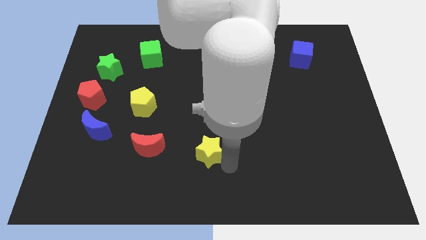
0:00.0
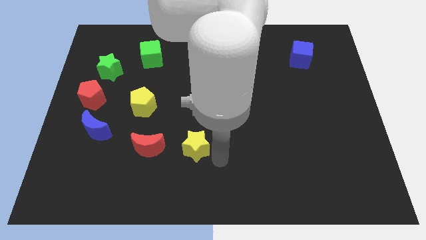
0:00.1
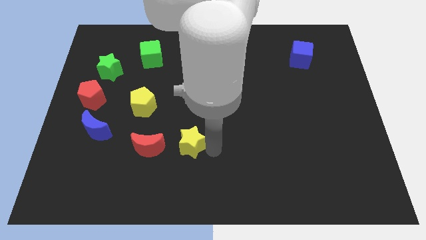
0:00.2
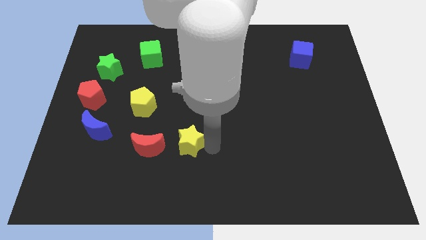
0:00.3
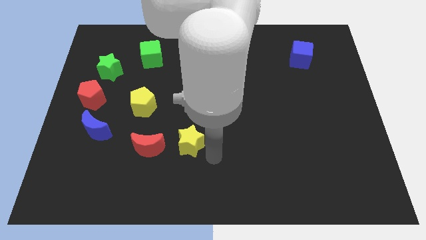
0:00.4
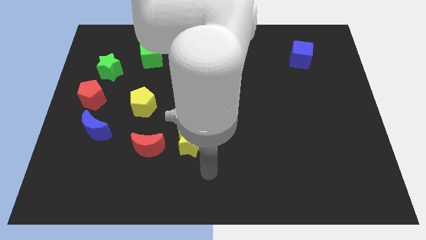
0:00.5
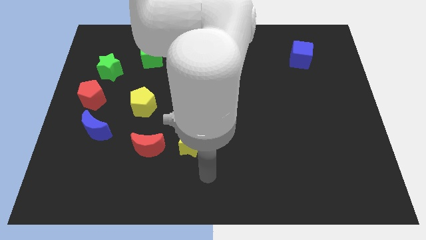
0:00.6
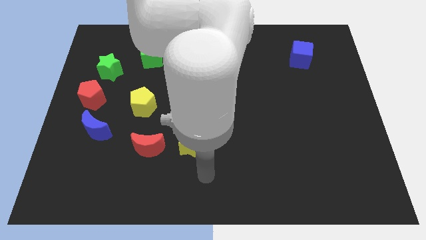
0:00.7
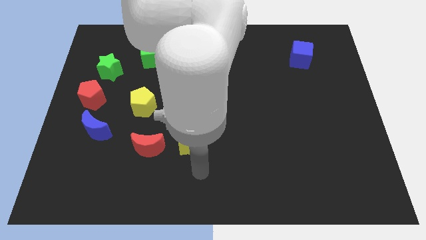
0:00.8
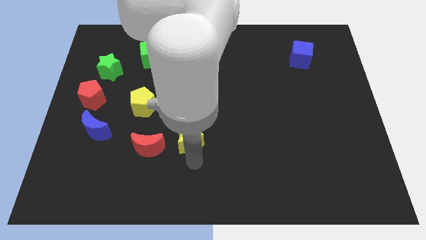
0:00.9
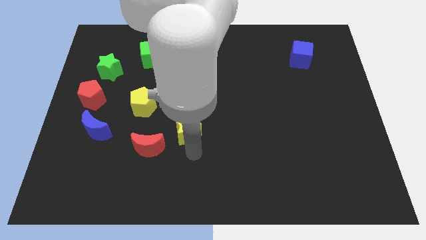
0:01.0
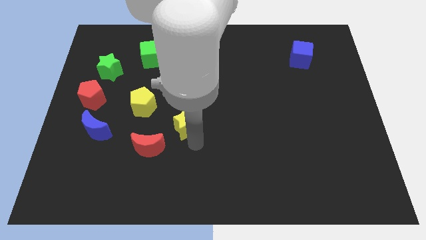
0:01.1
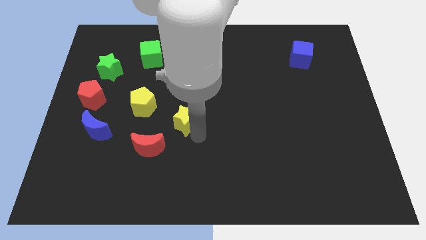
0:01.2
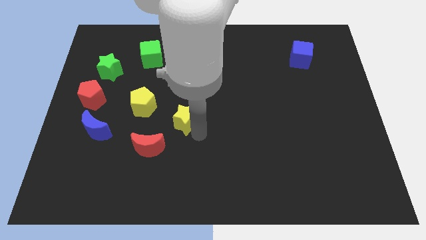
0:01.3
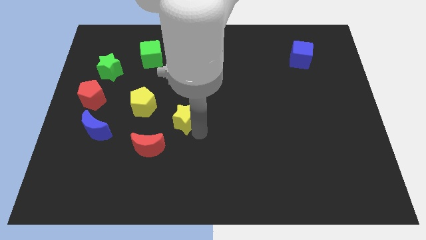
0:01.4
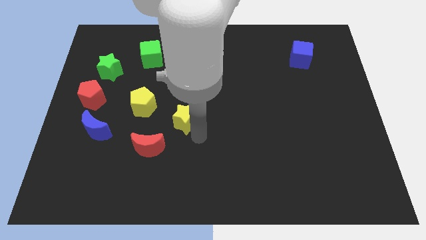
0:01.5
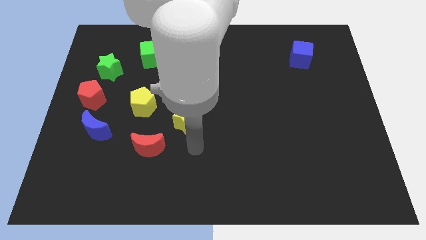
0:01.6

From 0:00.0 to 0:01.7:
move the yellow star diagonal to the red moon

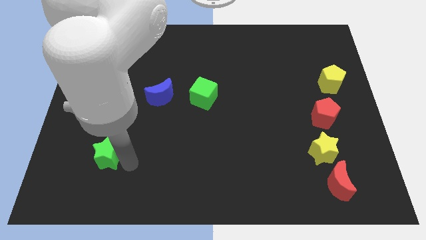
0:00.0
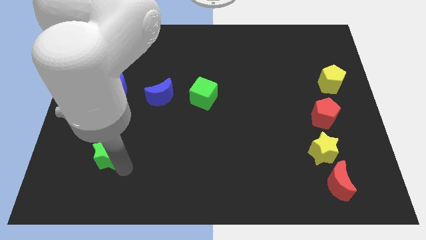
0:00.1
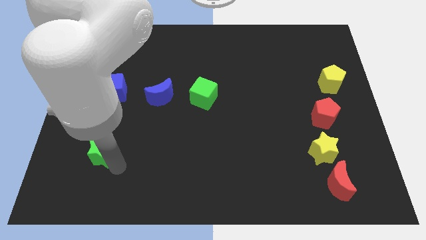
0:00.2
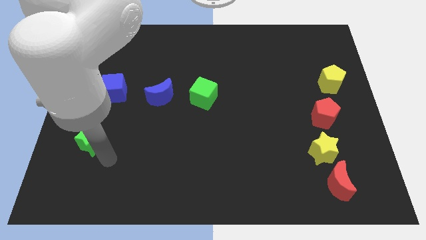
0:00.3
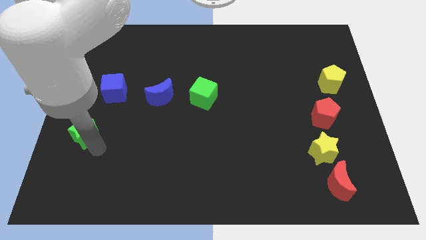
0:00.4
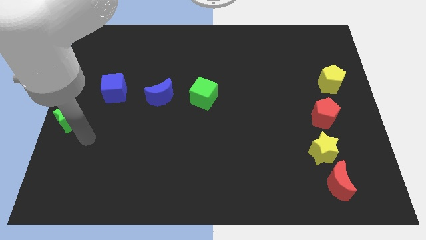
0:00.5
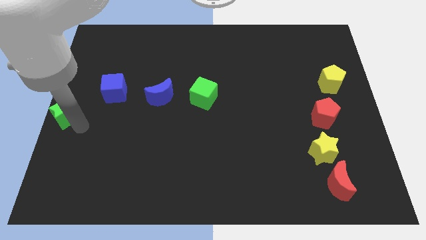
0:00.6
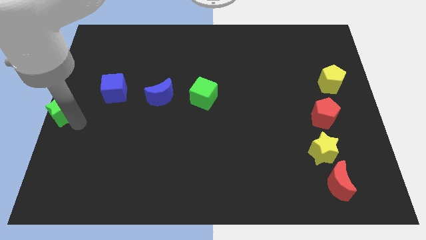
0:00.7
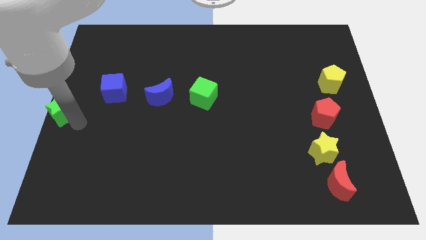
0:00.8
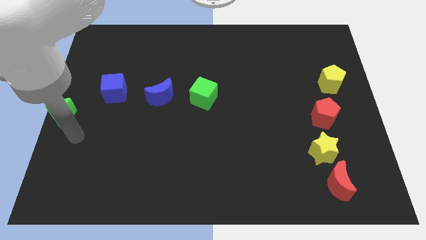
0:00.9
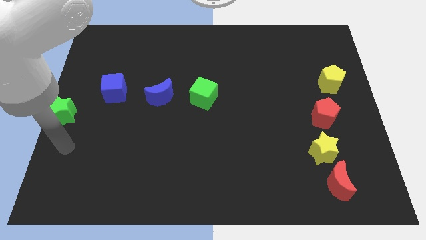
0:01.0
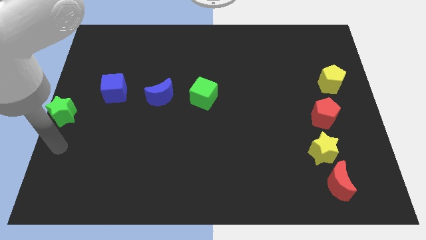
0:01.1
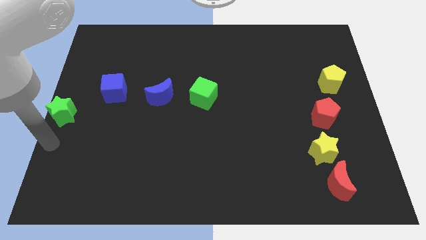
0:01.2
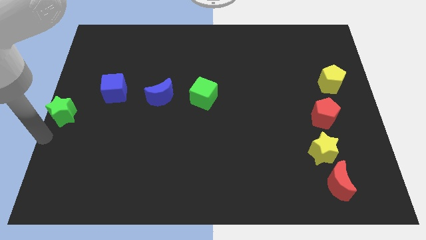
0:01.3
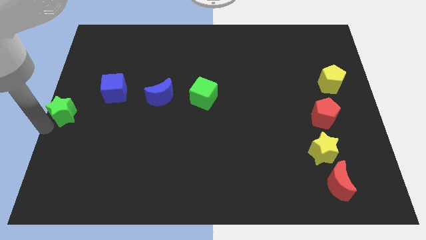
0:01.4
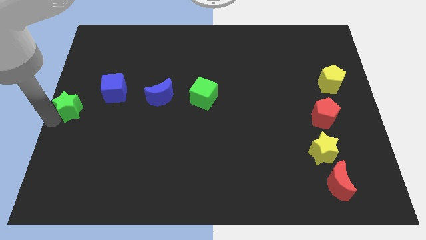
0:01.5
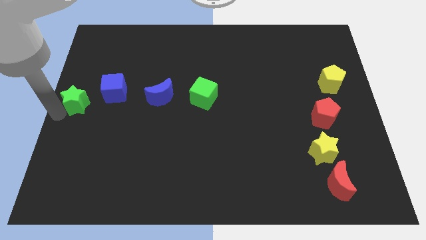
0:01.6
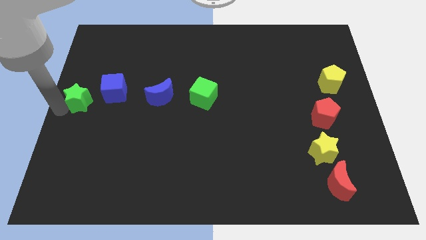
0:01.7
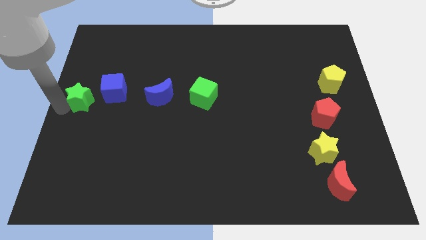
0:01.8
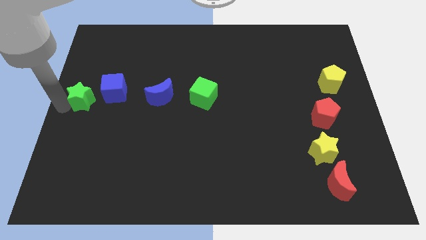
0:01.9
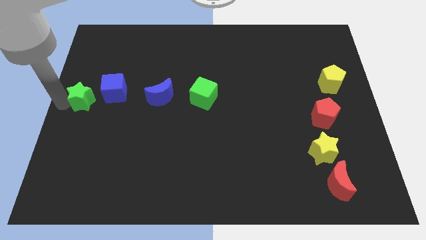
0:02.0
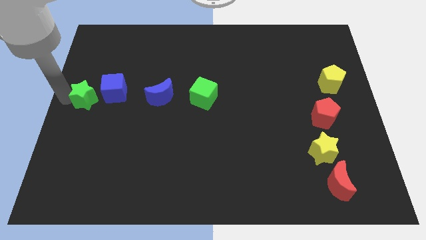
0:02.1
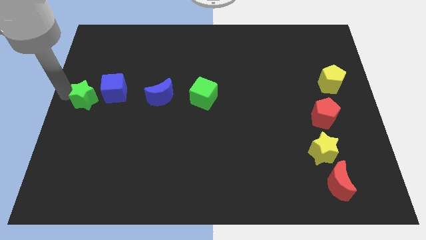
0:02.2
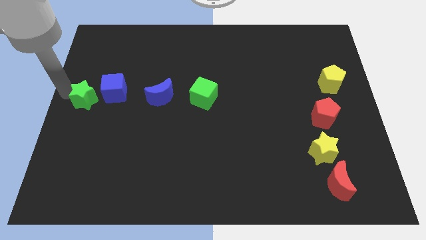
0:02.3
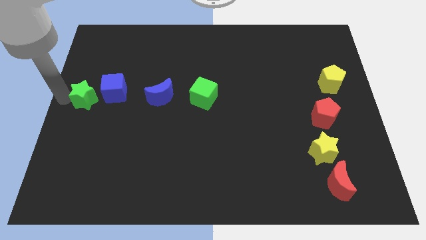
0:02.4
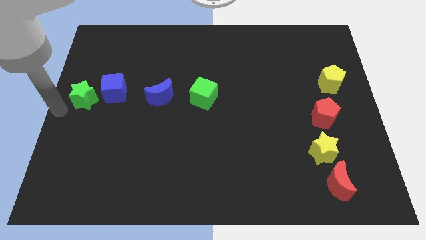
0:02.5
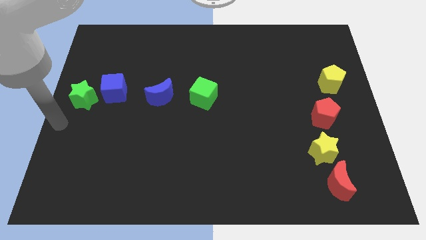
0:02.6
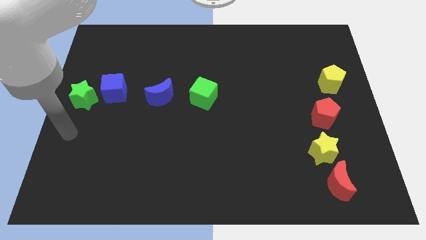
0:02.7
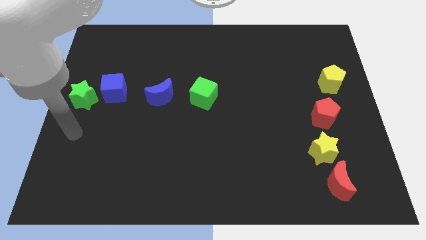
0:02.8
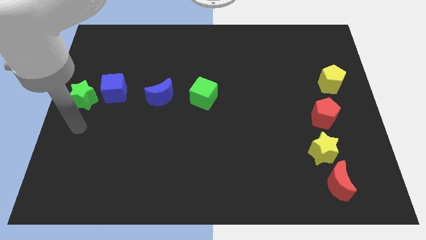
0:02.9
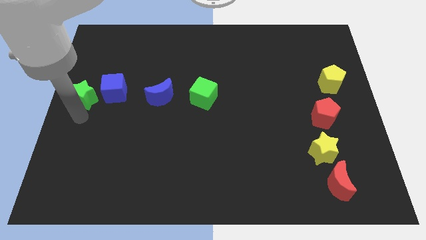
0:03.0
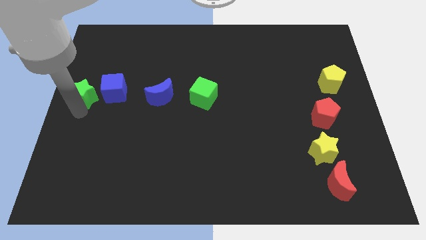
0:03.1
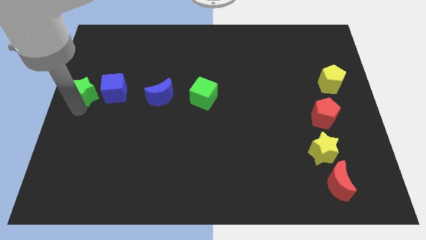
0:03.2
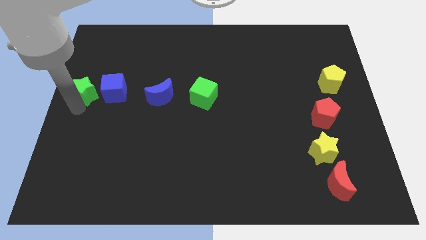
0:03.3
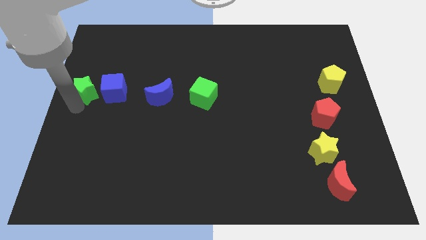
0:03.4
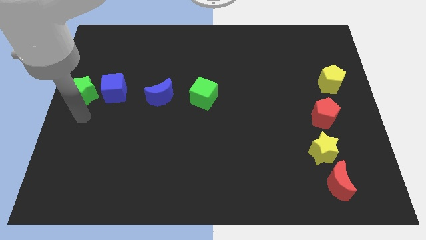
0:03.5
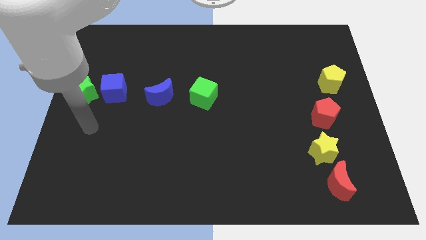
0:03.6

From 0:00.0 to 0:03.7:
put the green star to the left of the blue cube to form a horizontal line of blocks

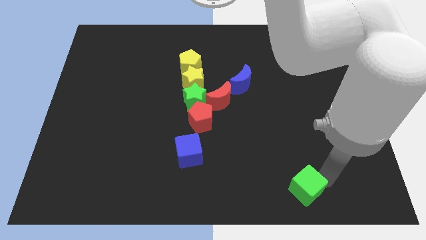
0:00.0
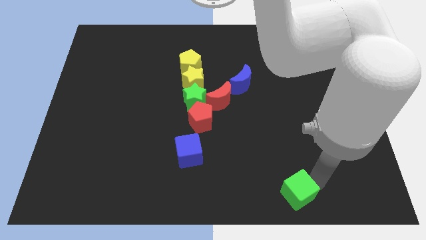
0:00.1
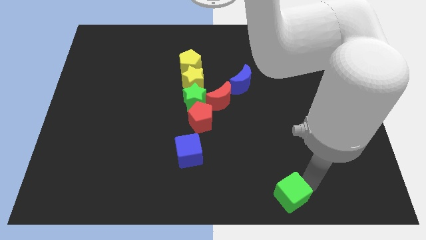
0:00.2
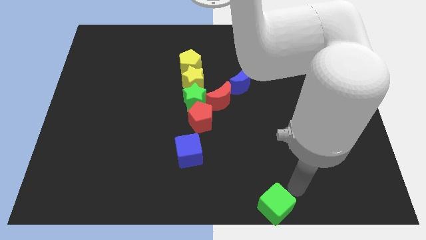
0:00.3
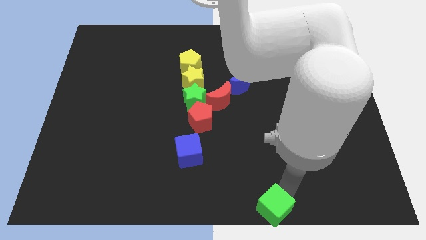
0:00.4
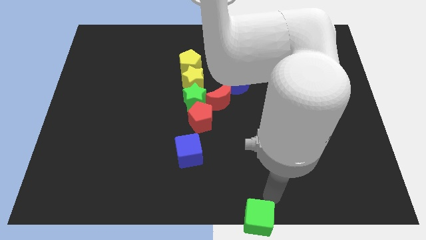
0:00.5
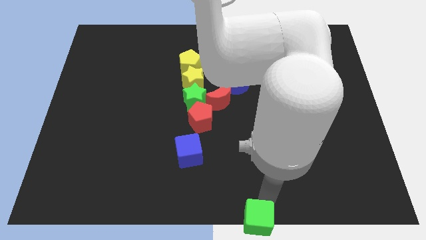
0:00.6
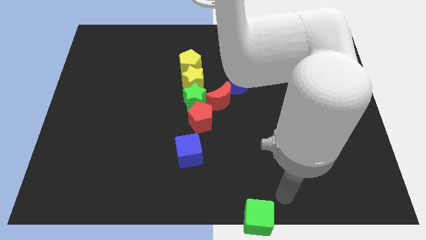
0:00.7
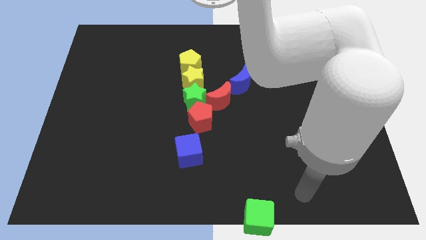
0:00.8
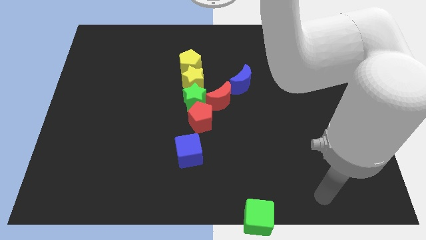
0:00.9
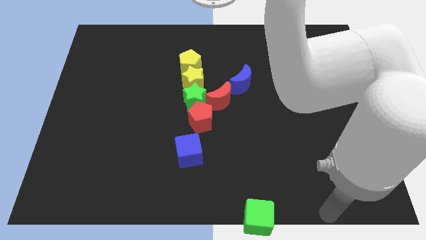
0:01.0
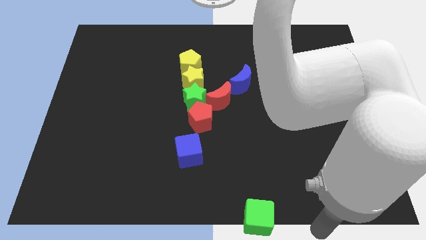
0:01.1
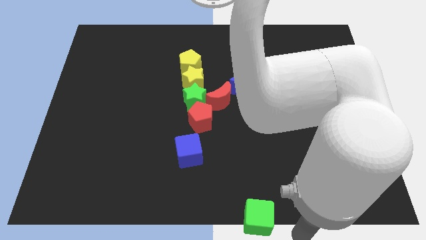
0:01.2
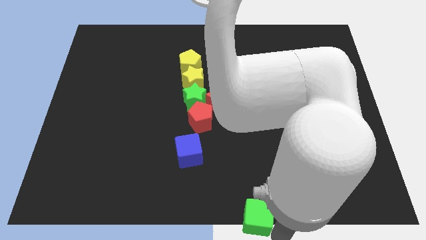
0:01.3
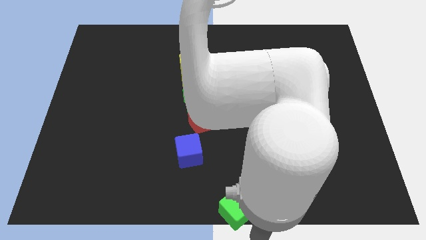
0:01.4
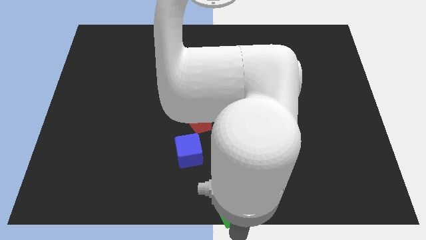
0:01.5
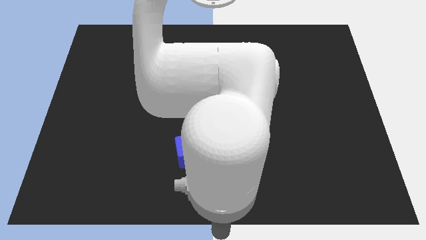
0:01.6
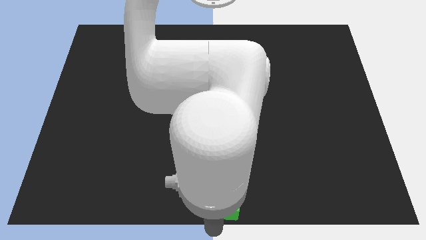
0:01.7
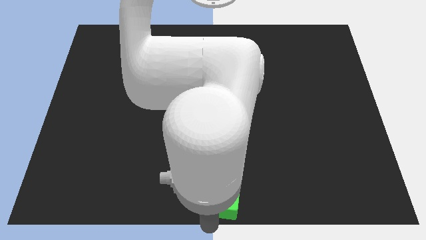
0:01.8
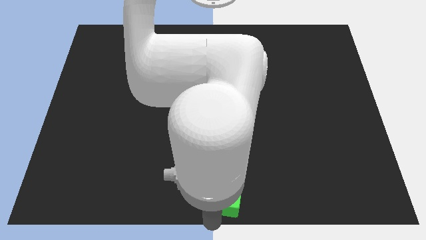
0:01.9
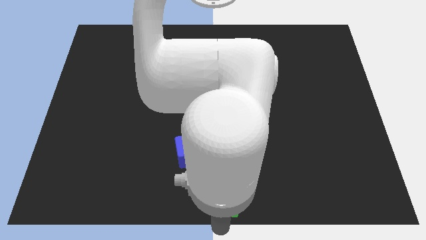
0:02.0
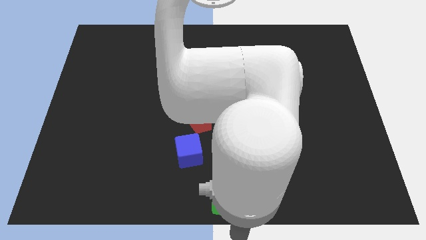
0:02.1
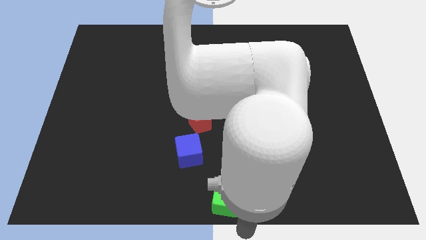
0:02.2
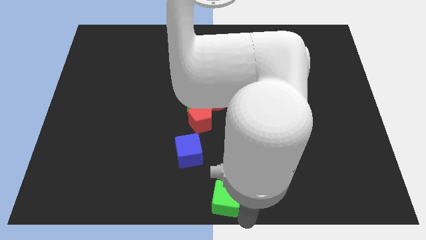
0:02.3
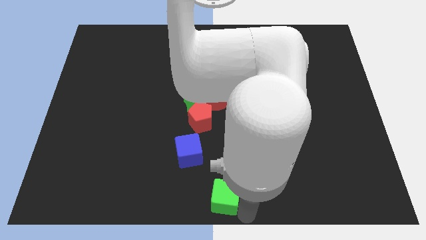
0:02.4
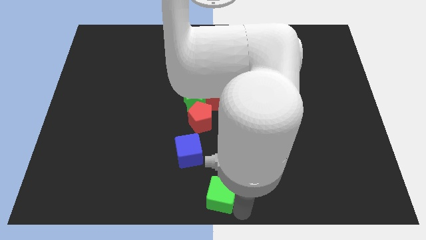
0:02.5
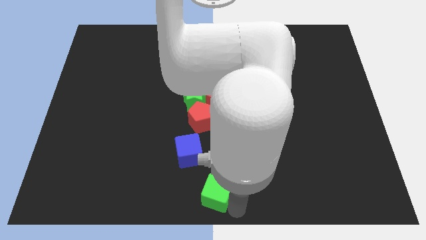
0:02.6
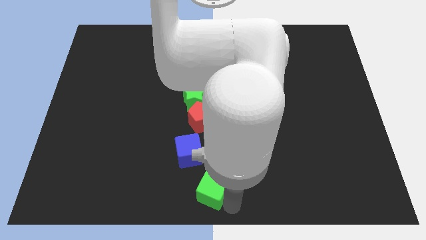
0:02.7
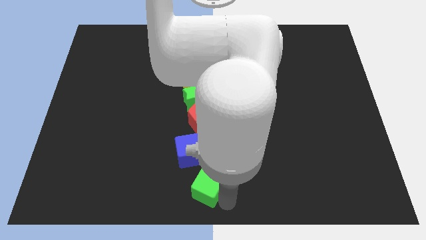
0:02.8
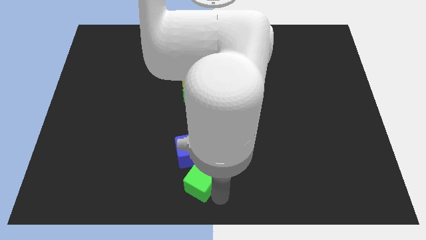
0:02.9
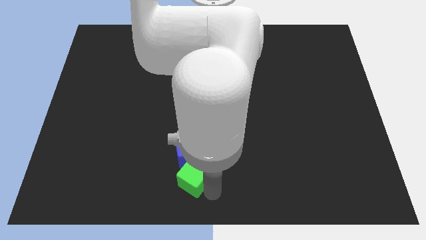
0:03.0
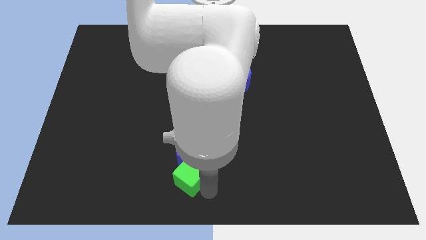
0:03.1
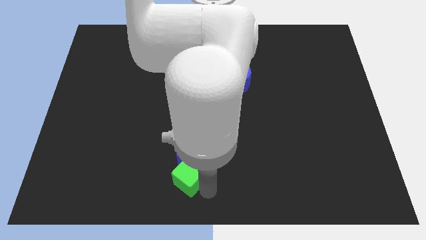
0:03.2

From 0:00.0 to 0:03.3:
place the green cube below the blue cube

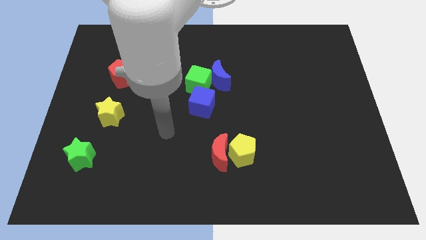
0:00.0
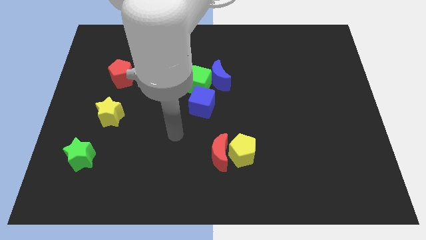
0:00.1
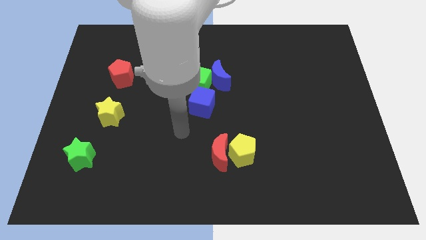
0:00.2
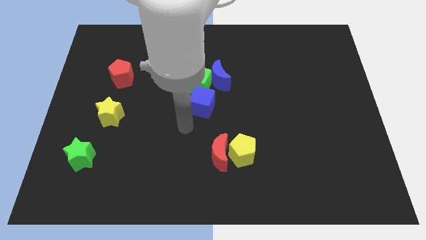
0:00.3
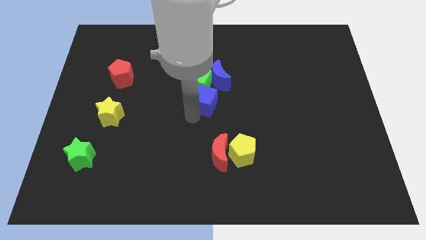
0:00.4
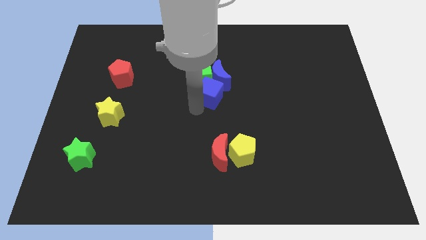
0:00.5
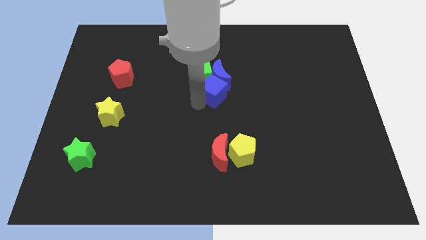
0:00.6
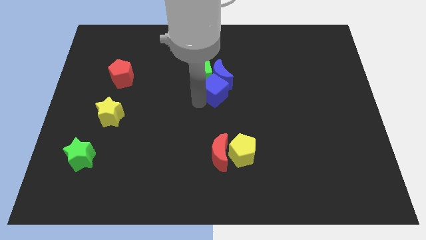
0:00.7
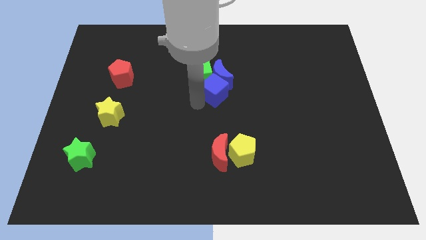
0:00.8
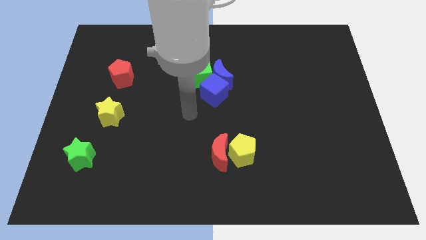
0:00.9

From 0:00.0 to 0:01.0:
move the blue cube into the blue moon
